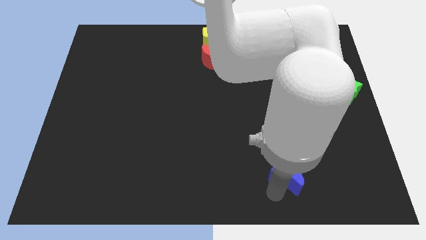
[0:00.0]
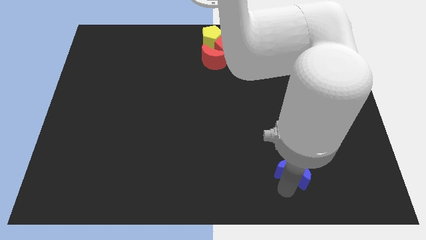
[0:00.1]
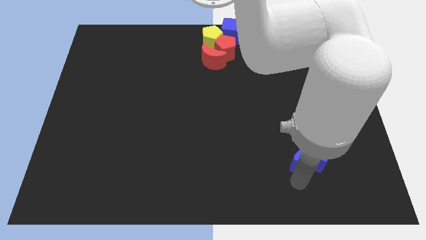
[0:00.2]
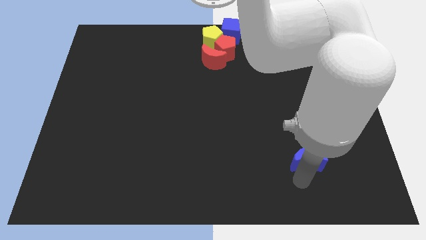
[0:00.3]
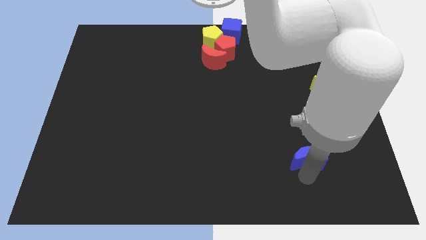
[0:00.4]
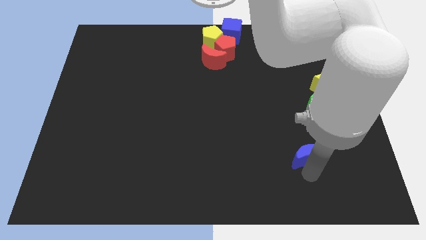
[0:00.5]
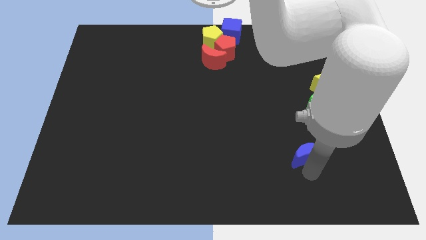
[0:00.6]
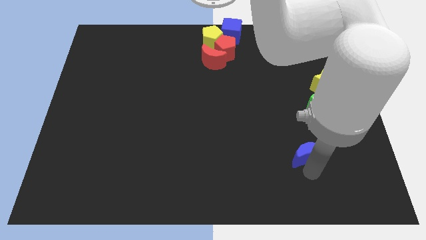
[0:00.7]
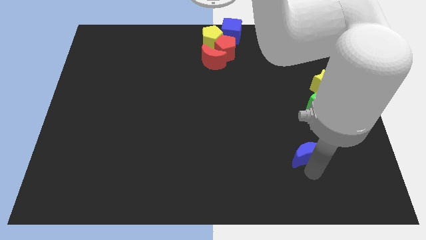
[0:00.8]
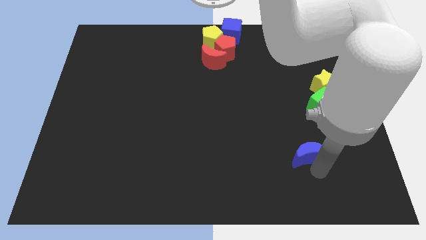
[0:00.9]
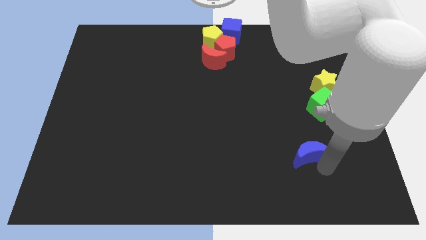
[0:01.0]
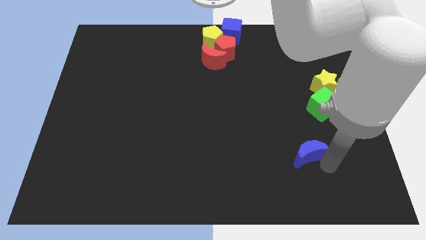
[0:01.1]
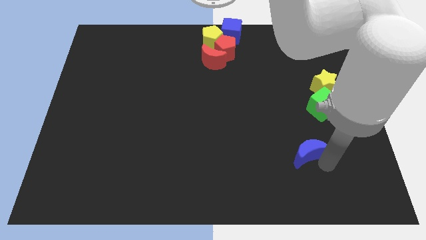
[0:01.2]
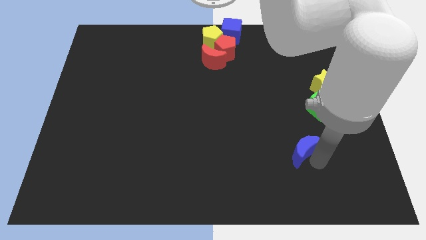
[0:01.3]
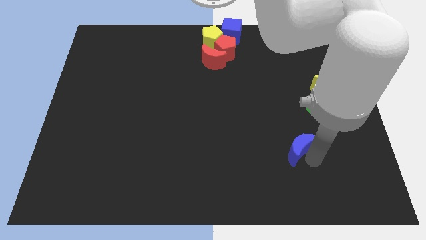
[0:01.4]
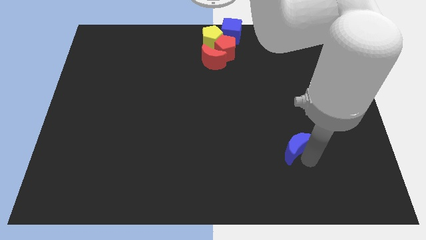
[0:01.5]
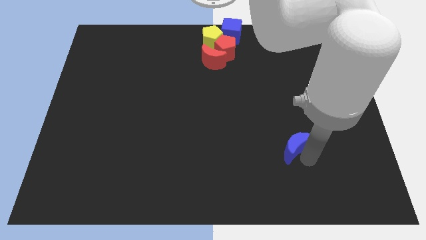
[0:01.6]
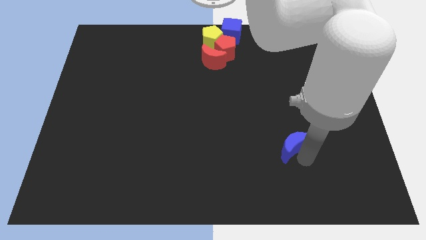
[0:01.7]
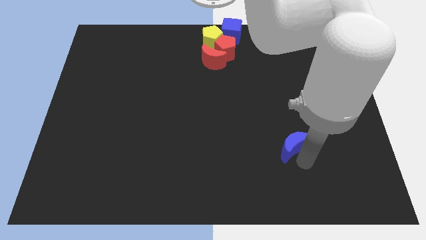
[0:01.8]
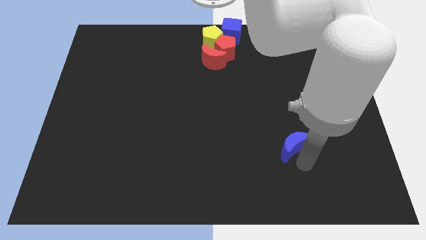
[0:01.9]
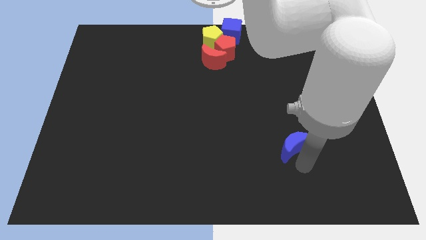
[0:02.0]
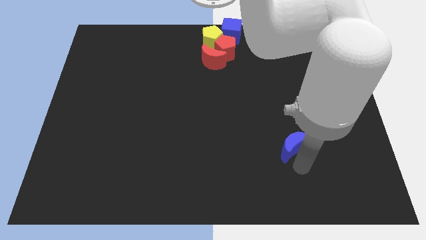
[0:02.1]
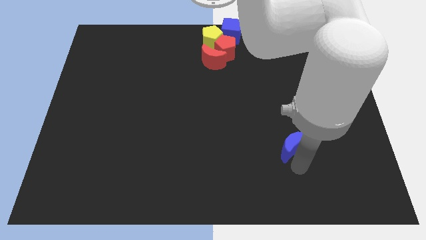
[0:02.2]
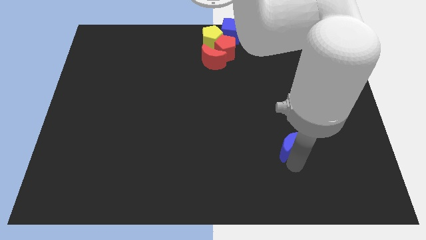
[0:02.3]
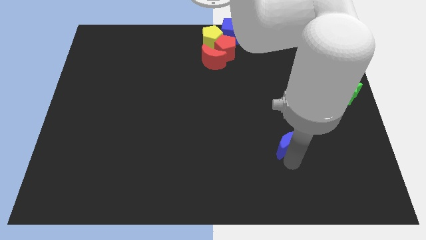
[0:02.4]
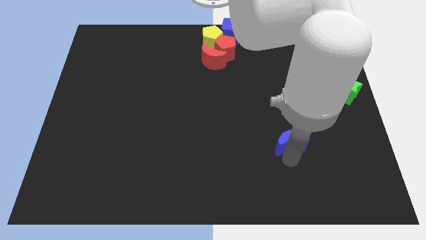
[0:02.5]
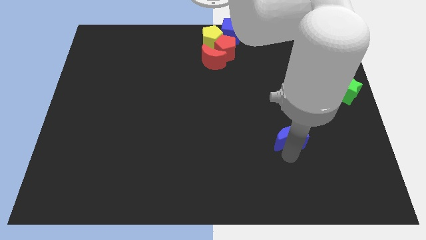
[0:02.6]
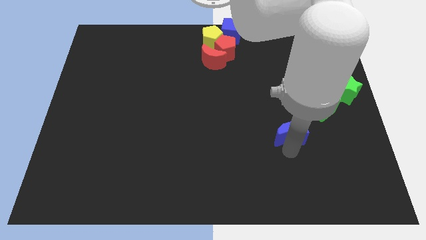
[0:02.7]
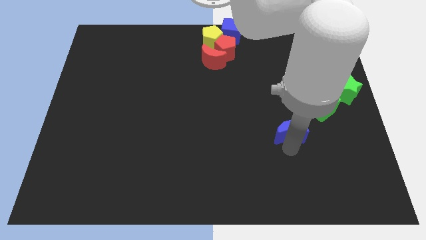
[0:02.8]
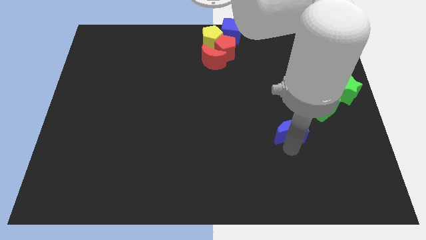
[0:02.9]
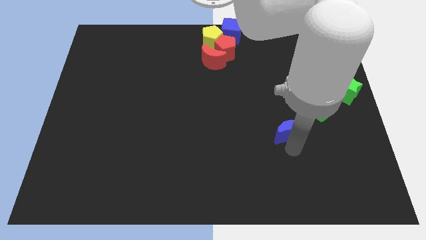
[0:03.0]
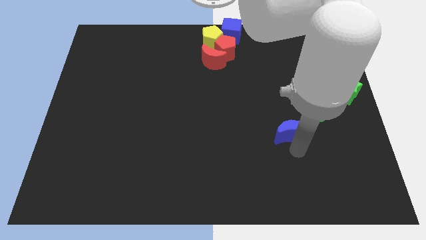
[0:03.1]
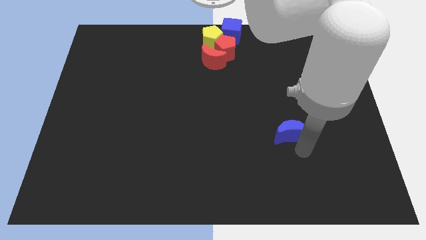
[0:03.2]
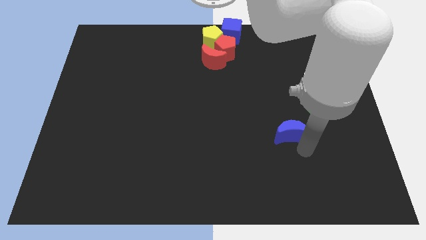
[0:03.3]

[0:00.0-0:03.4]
move the blue crescent slightly upwards

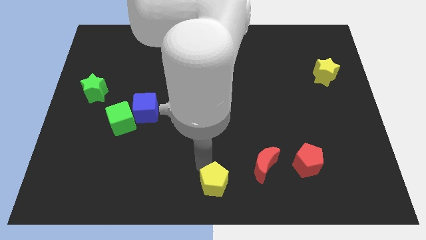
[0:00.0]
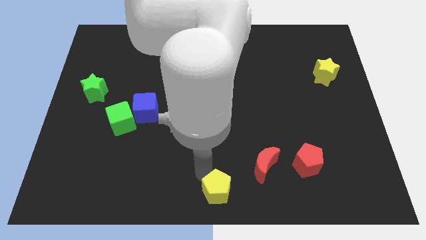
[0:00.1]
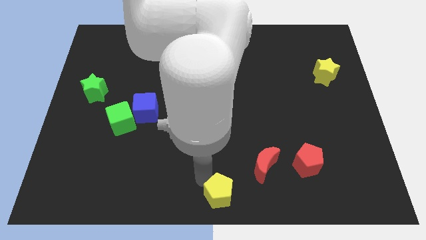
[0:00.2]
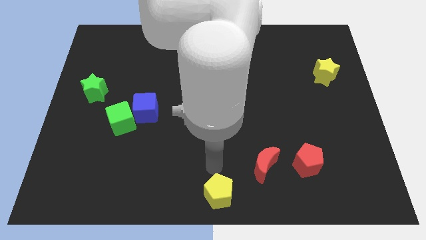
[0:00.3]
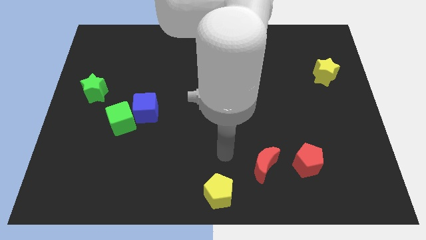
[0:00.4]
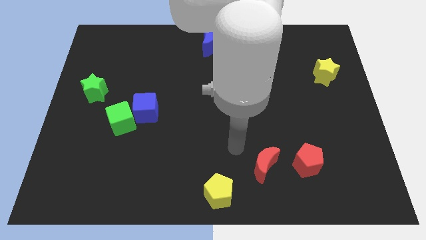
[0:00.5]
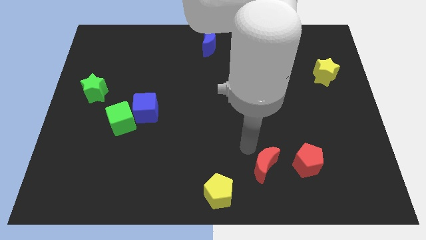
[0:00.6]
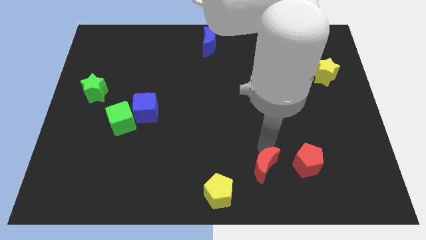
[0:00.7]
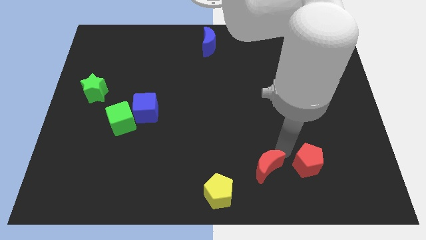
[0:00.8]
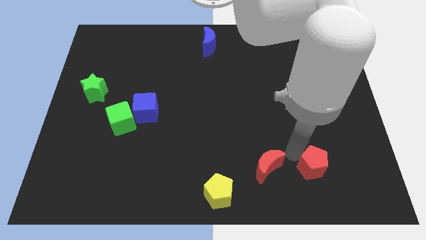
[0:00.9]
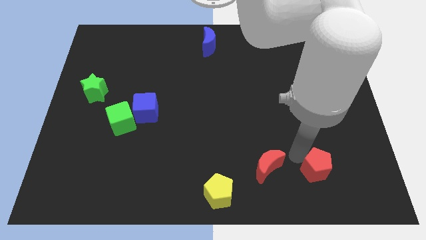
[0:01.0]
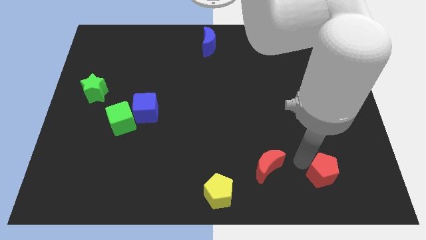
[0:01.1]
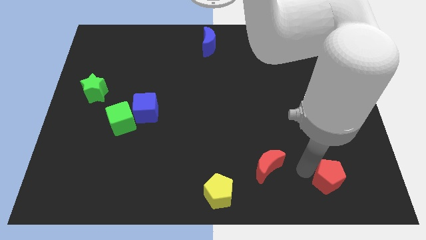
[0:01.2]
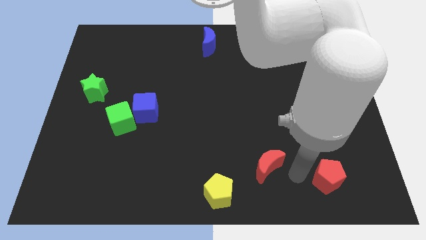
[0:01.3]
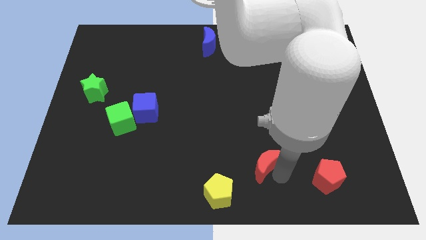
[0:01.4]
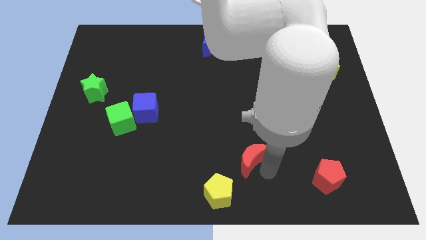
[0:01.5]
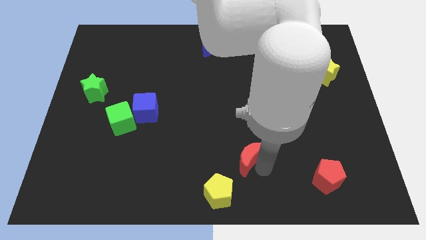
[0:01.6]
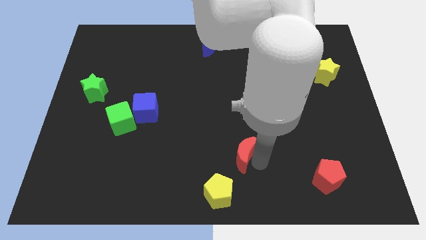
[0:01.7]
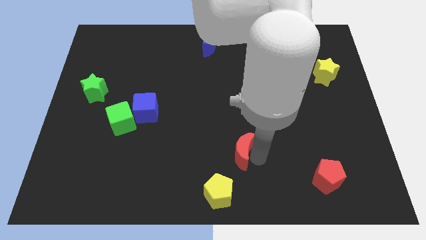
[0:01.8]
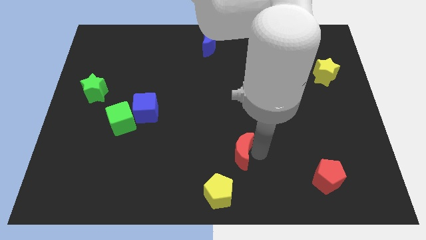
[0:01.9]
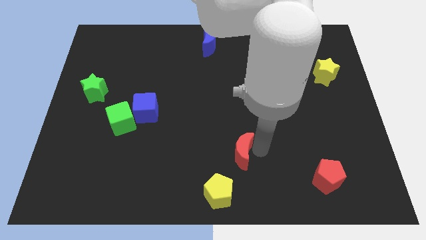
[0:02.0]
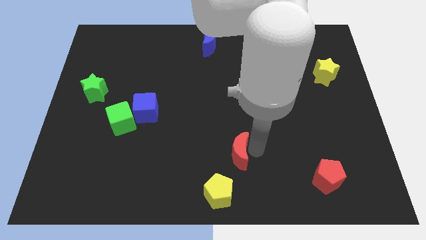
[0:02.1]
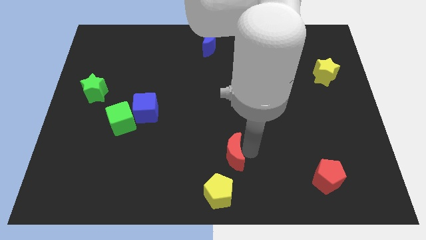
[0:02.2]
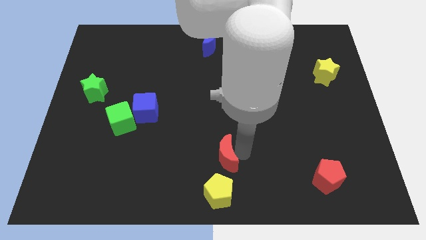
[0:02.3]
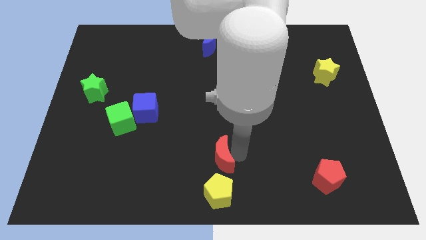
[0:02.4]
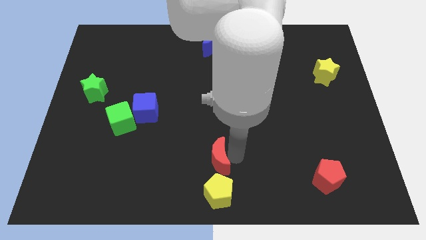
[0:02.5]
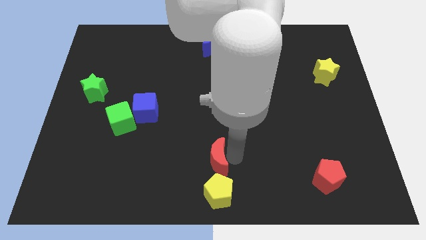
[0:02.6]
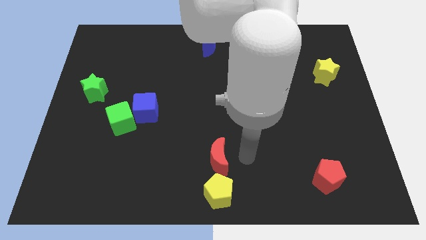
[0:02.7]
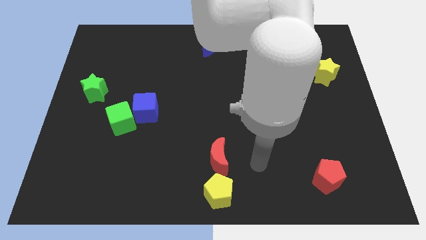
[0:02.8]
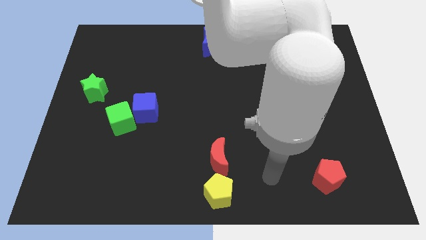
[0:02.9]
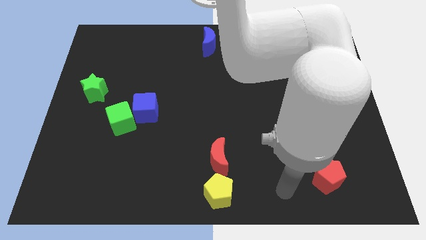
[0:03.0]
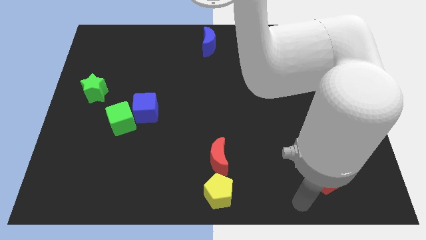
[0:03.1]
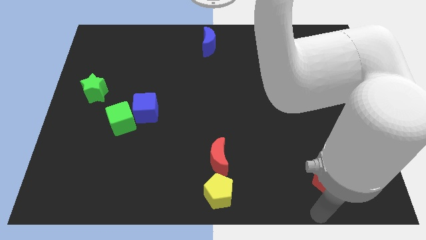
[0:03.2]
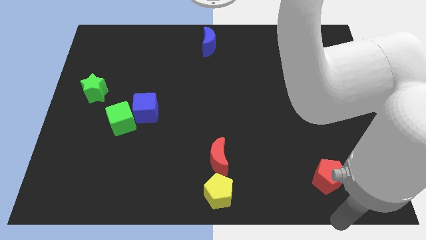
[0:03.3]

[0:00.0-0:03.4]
place the red moon on the top side of the yellow pentagon

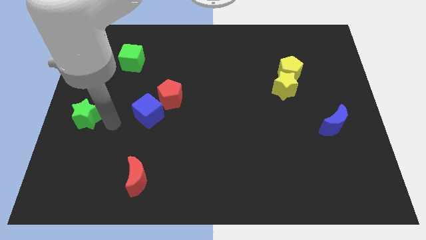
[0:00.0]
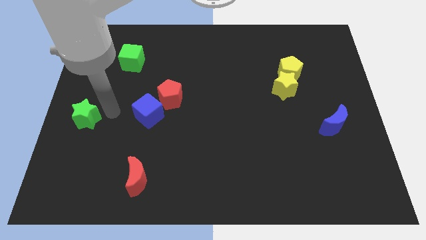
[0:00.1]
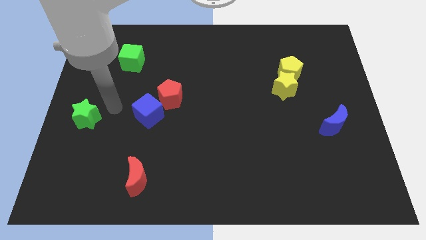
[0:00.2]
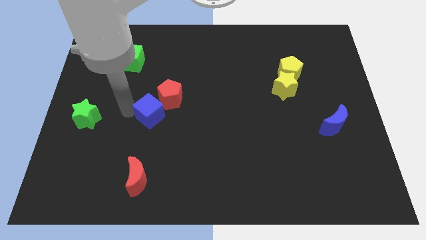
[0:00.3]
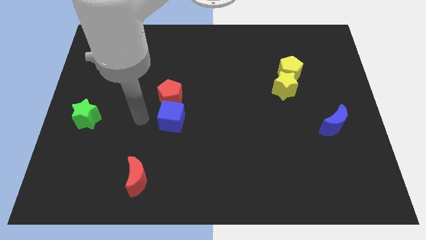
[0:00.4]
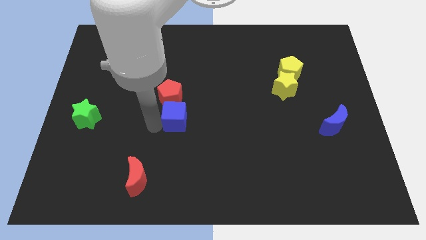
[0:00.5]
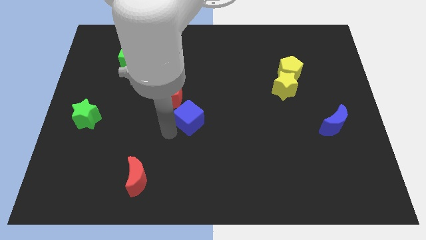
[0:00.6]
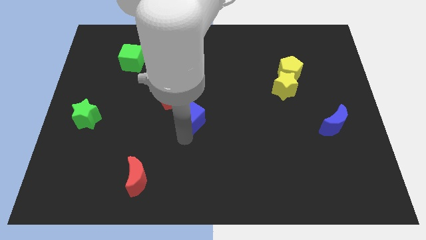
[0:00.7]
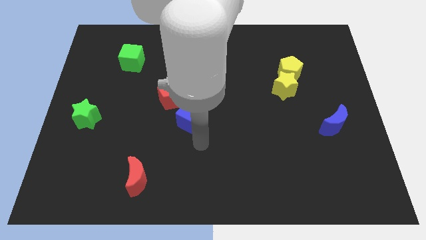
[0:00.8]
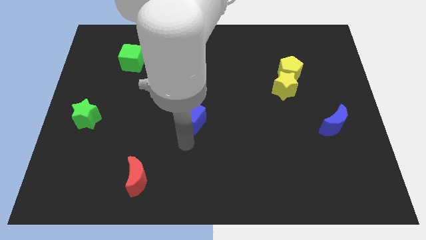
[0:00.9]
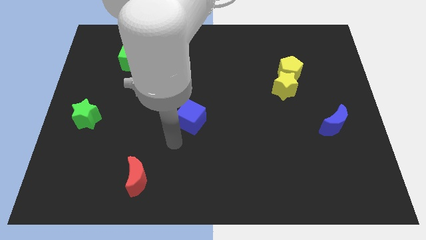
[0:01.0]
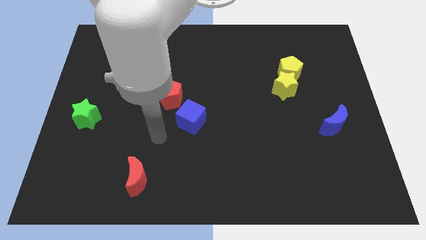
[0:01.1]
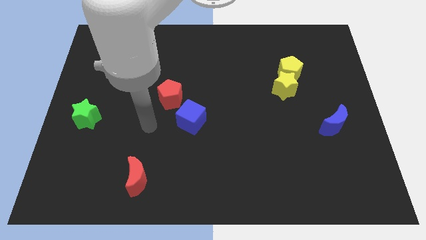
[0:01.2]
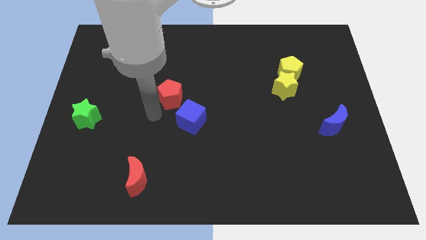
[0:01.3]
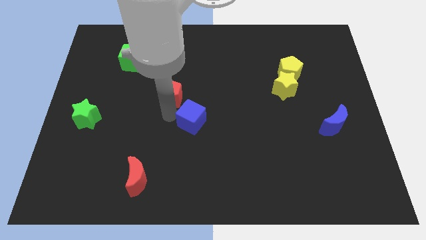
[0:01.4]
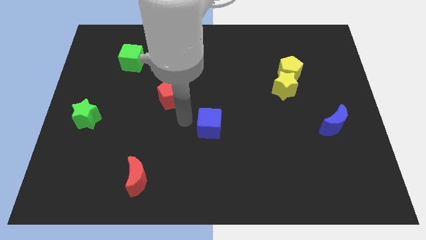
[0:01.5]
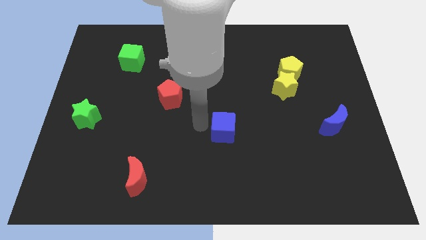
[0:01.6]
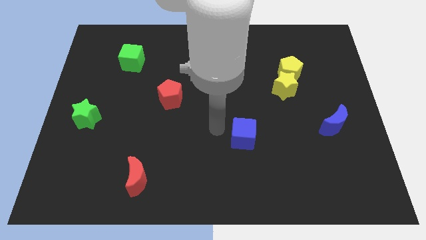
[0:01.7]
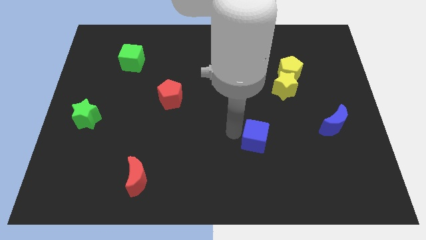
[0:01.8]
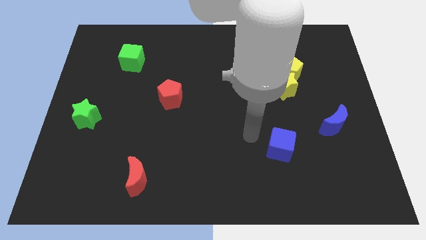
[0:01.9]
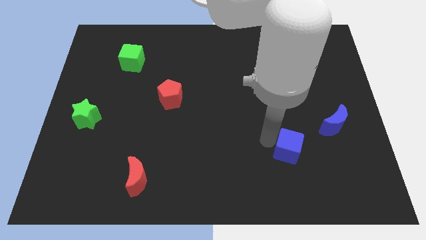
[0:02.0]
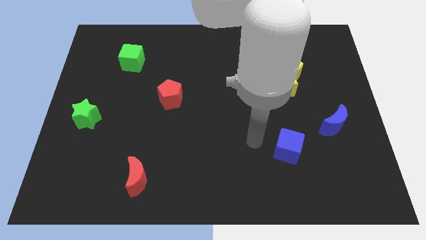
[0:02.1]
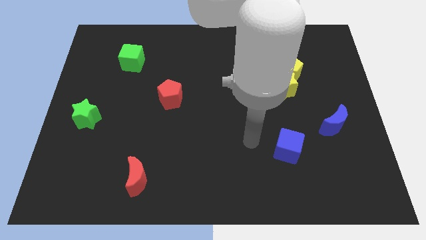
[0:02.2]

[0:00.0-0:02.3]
push the blue cube to the bottom of the yellow star
